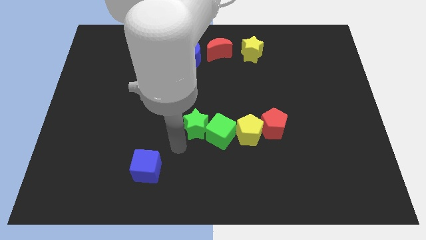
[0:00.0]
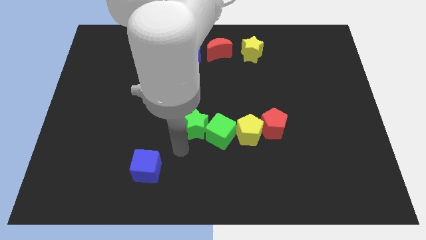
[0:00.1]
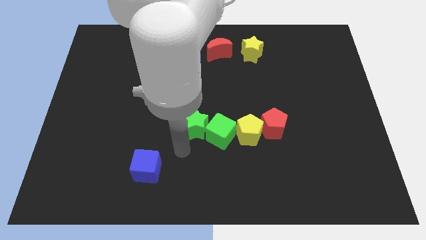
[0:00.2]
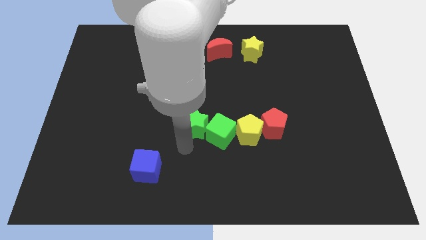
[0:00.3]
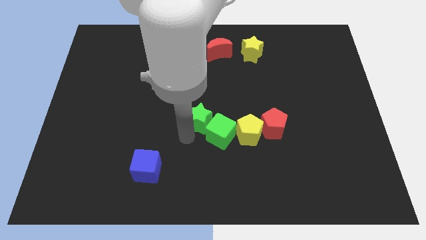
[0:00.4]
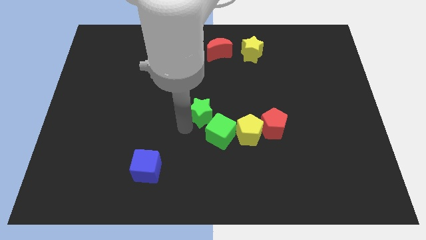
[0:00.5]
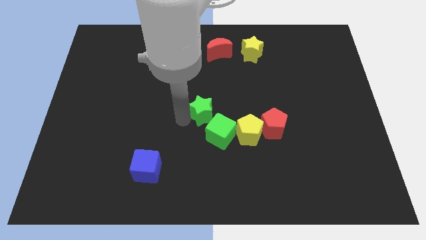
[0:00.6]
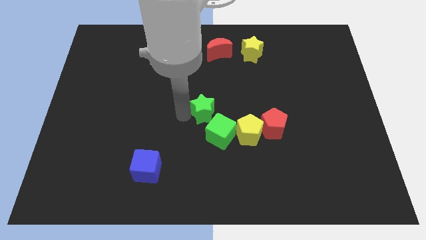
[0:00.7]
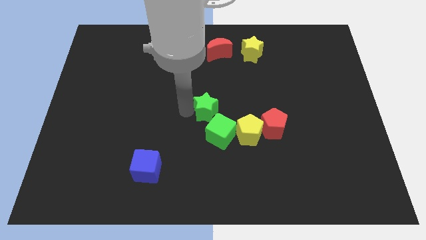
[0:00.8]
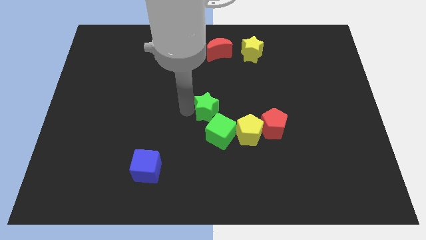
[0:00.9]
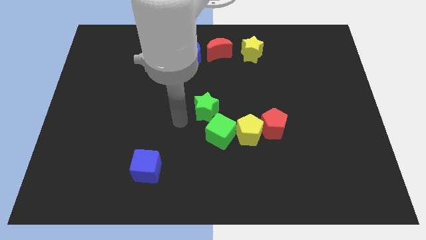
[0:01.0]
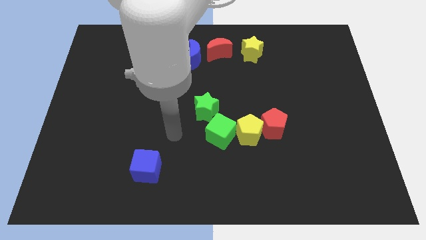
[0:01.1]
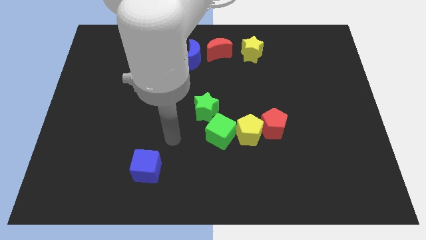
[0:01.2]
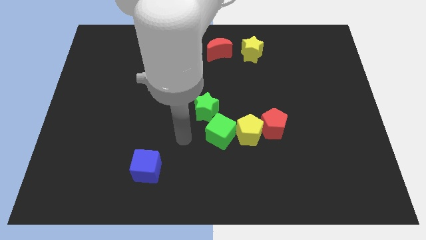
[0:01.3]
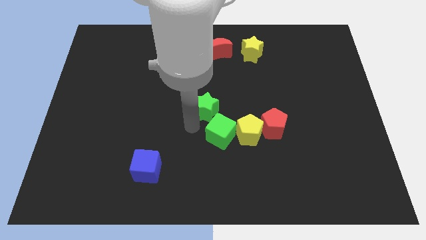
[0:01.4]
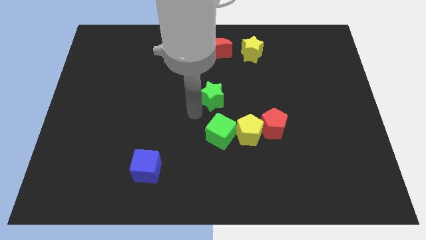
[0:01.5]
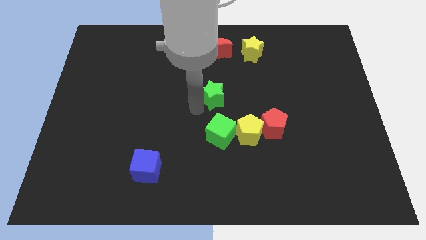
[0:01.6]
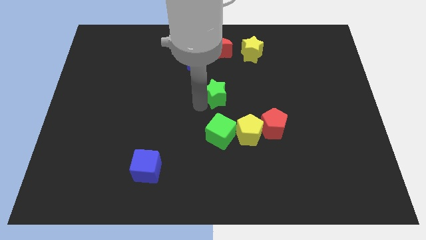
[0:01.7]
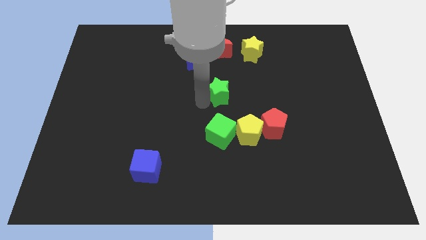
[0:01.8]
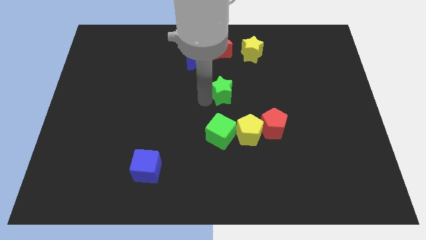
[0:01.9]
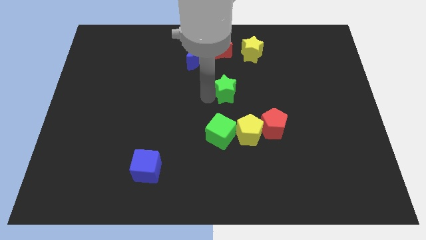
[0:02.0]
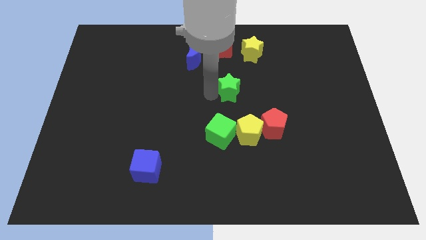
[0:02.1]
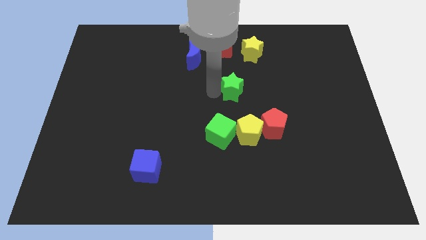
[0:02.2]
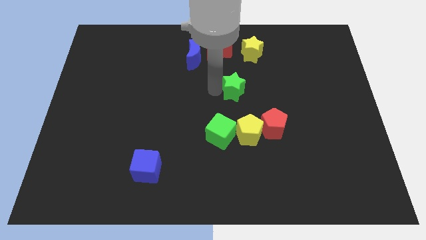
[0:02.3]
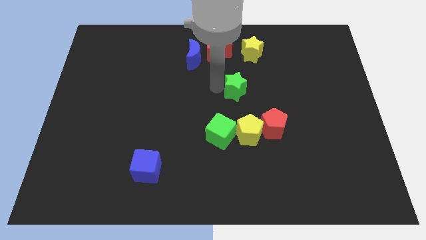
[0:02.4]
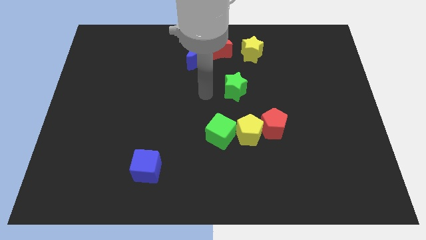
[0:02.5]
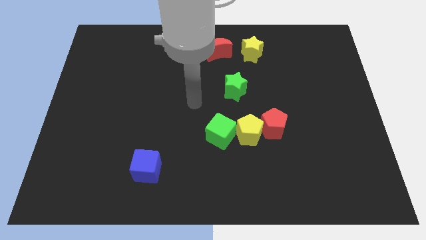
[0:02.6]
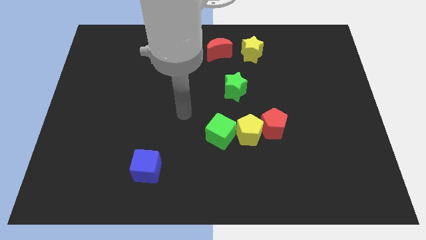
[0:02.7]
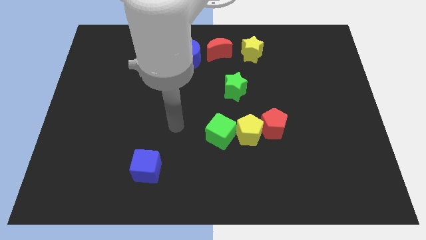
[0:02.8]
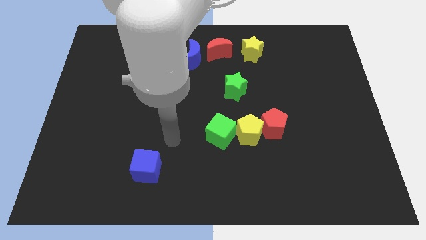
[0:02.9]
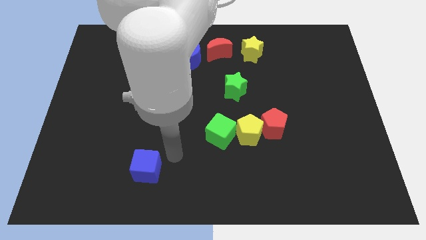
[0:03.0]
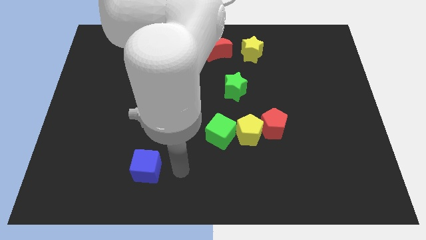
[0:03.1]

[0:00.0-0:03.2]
drag the green star away from the green cube

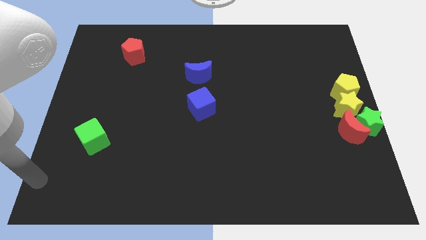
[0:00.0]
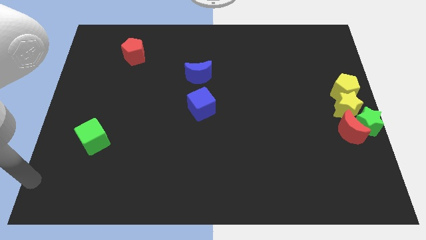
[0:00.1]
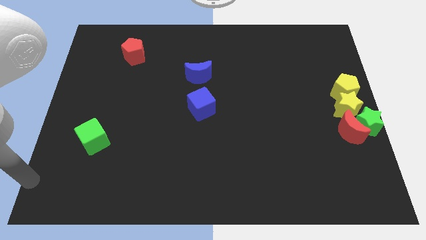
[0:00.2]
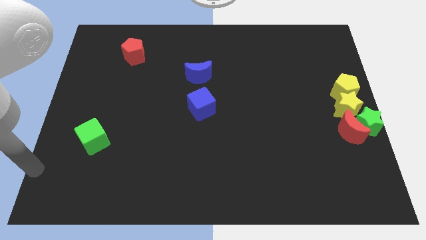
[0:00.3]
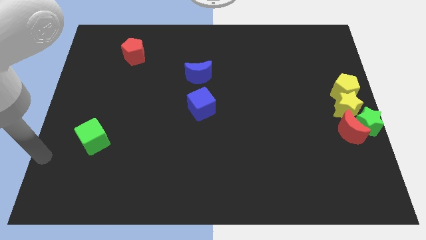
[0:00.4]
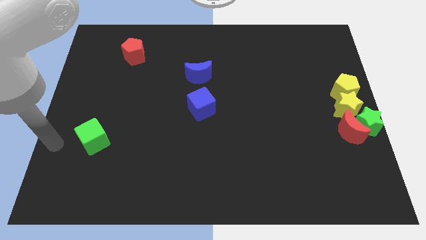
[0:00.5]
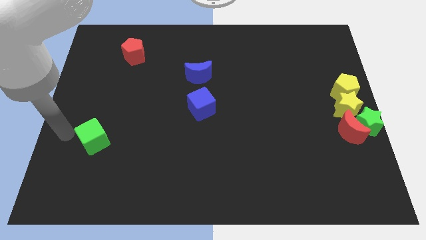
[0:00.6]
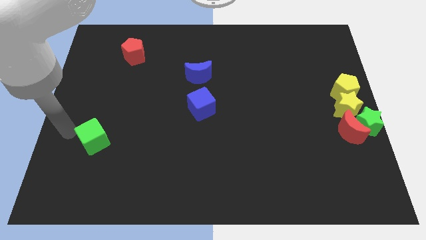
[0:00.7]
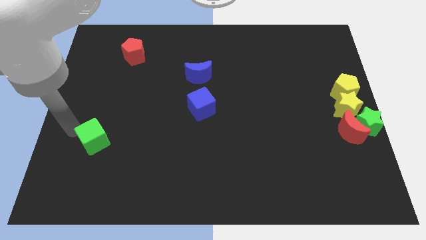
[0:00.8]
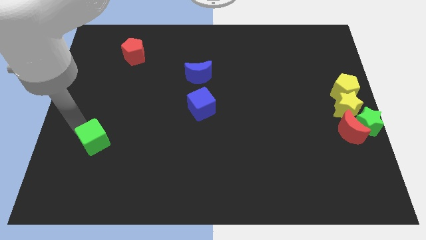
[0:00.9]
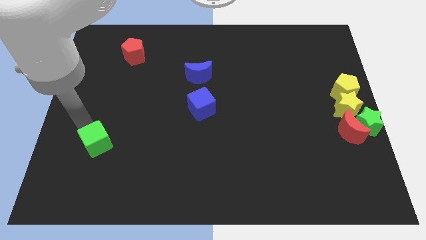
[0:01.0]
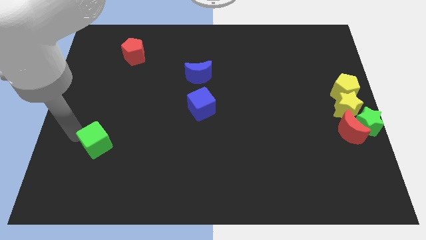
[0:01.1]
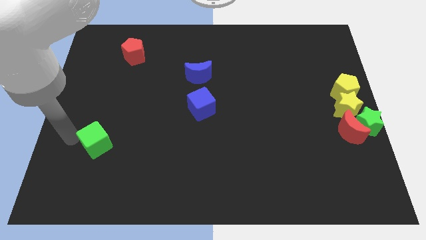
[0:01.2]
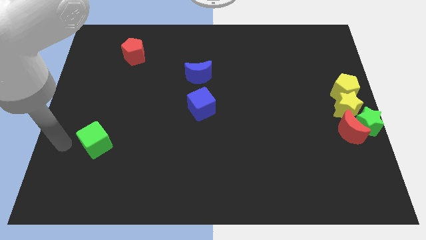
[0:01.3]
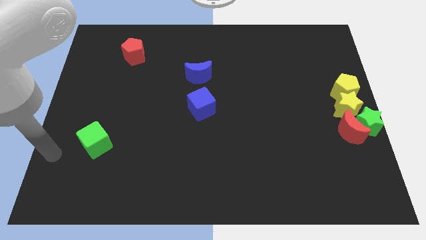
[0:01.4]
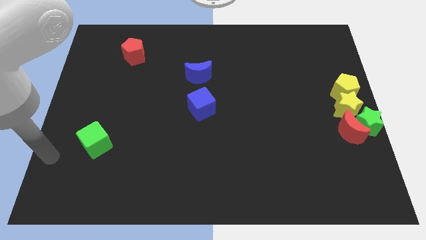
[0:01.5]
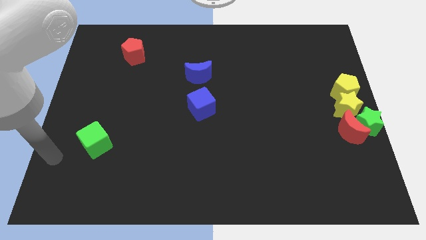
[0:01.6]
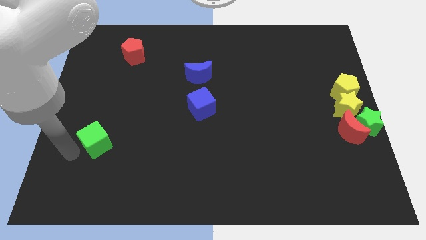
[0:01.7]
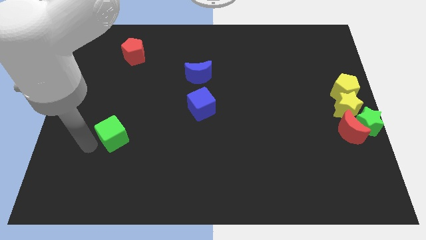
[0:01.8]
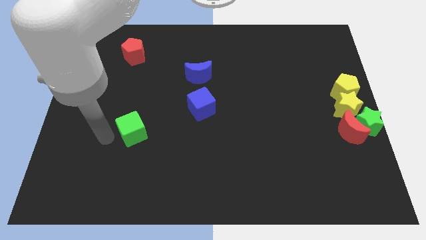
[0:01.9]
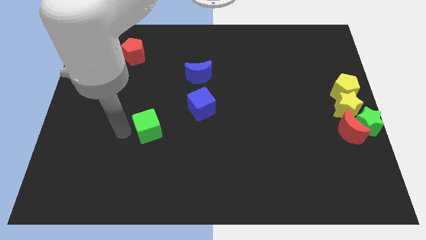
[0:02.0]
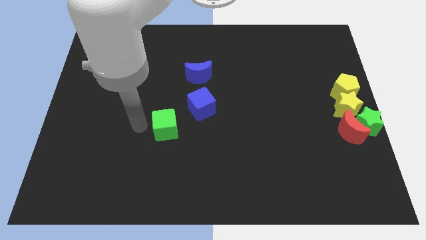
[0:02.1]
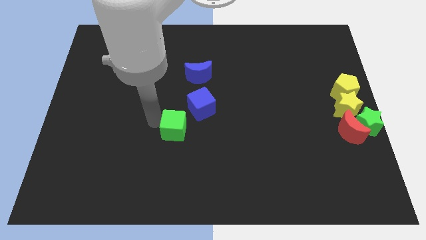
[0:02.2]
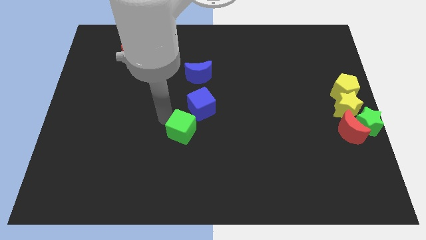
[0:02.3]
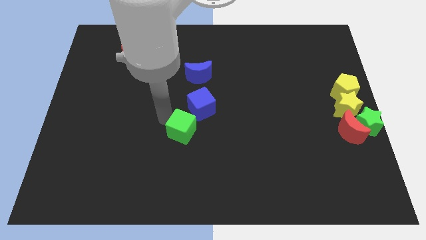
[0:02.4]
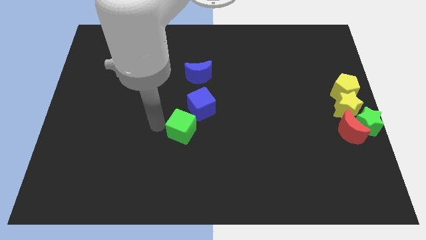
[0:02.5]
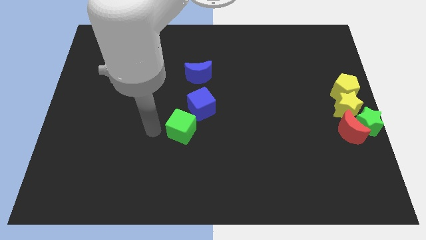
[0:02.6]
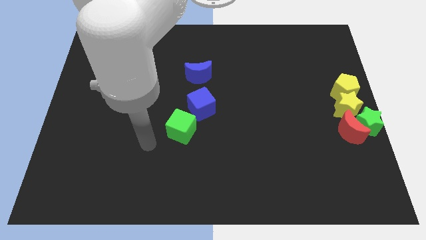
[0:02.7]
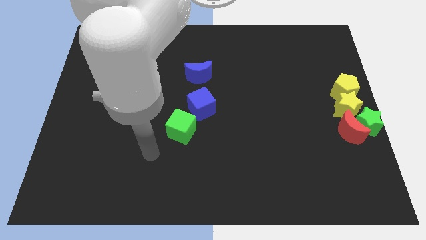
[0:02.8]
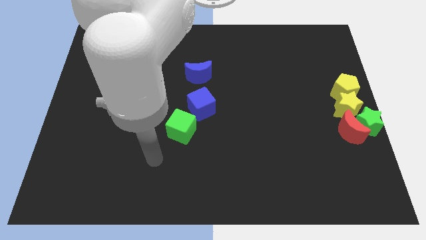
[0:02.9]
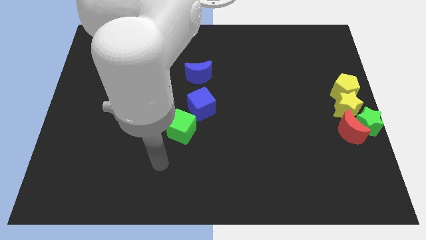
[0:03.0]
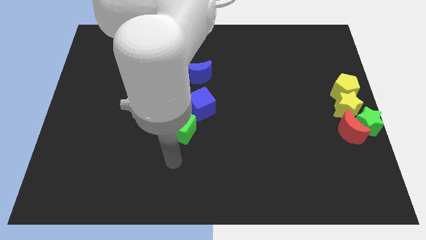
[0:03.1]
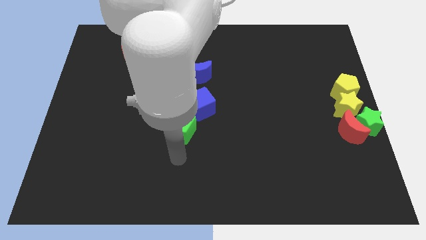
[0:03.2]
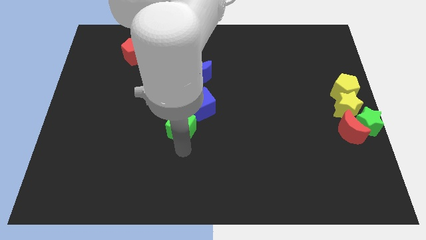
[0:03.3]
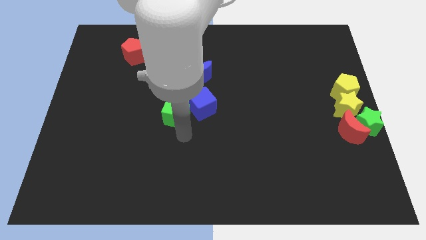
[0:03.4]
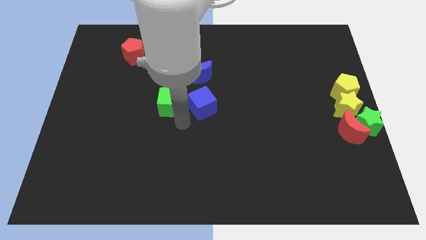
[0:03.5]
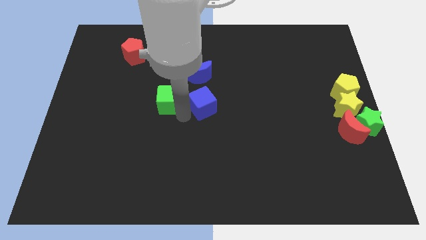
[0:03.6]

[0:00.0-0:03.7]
move green cube left beside the blue cube

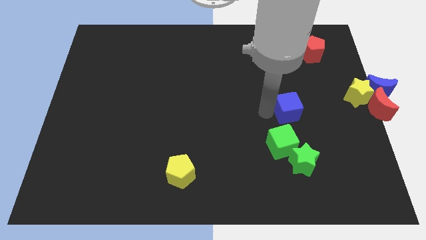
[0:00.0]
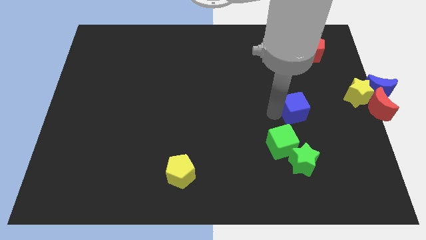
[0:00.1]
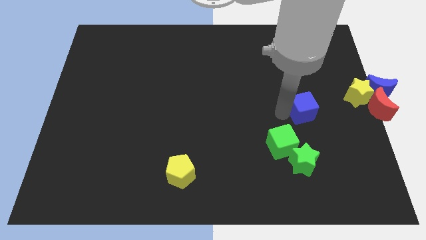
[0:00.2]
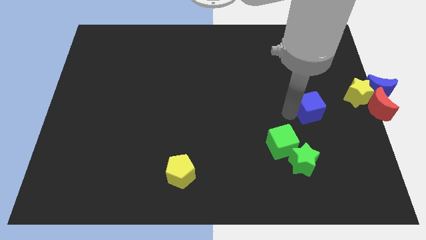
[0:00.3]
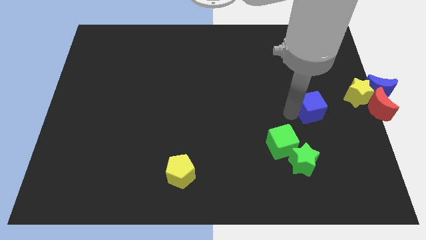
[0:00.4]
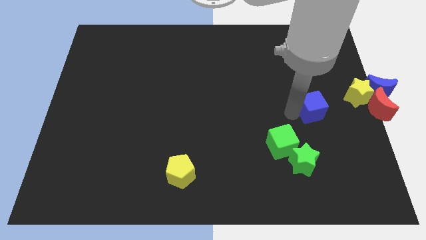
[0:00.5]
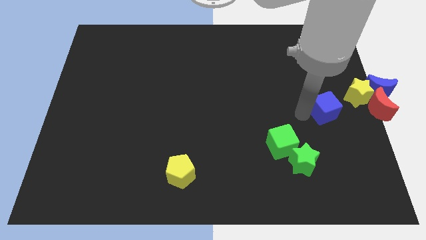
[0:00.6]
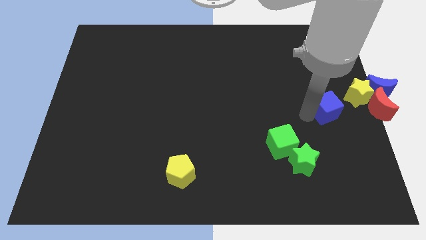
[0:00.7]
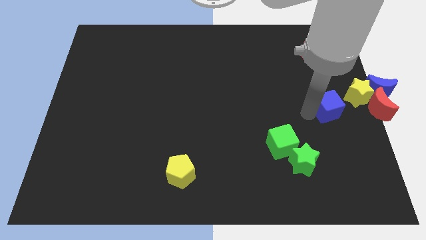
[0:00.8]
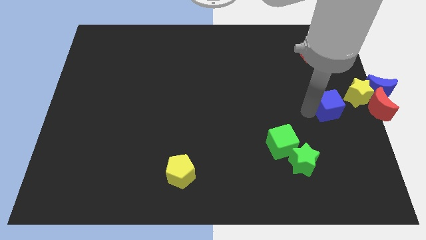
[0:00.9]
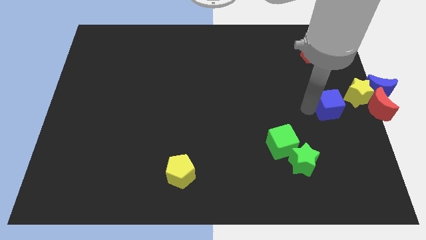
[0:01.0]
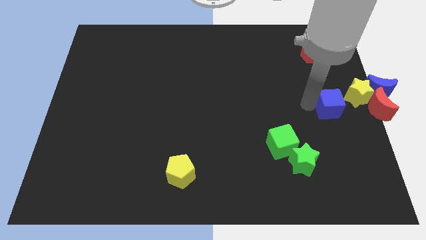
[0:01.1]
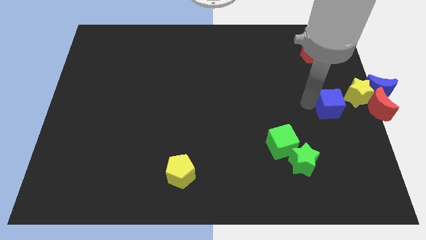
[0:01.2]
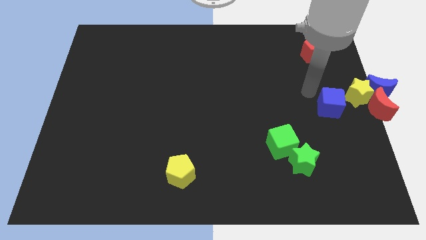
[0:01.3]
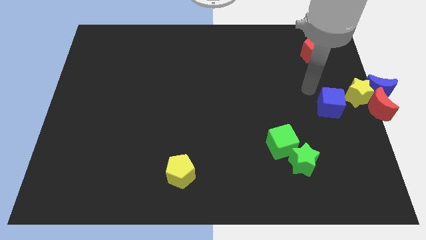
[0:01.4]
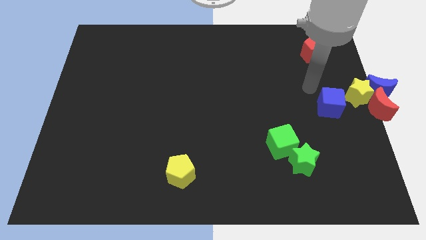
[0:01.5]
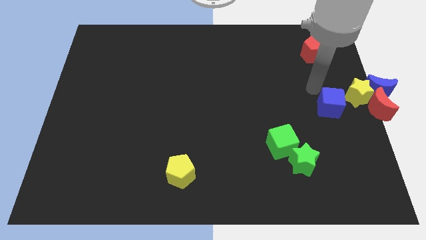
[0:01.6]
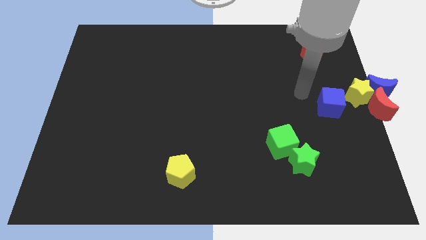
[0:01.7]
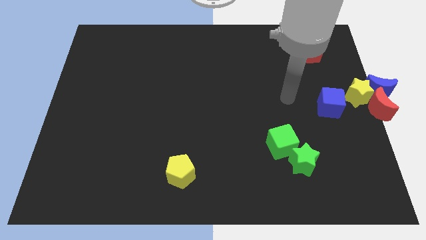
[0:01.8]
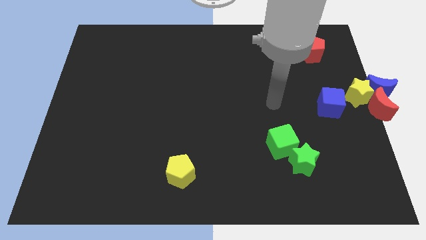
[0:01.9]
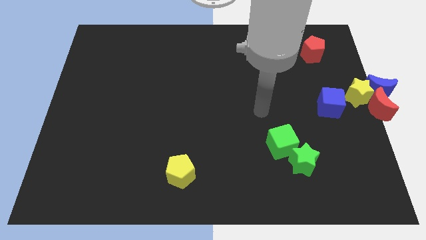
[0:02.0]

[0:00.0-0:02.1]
drag the blue cube close to the yellow star
